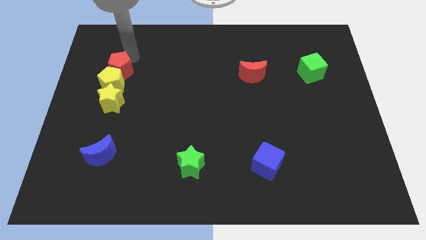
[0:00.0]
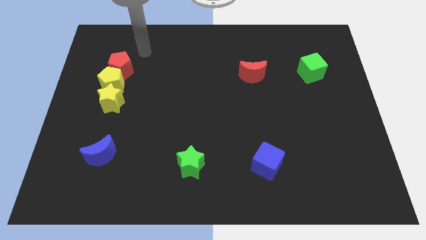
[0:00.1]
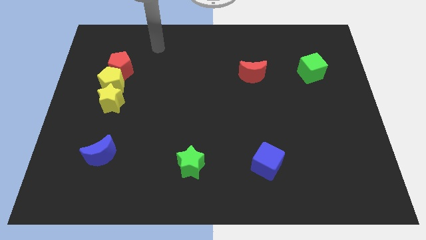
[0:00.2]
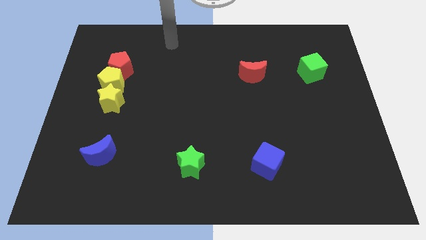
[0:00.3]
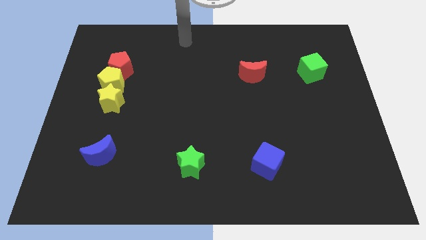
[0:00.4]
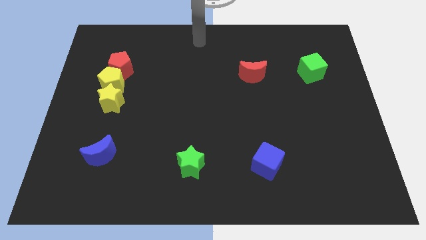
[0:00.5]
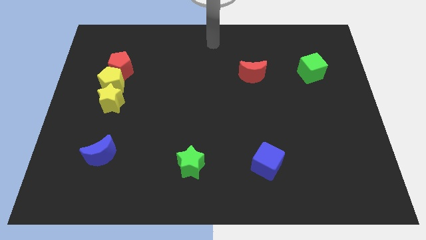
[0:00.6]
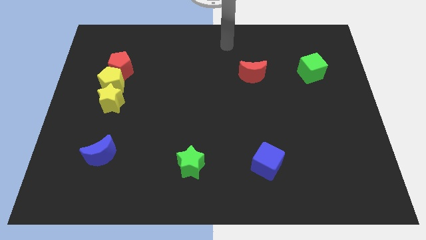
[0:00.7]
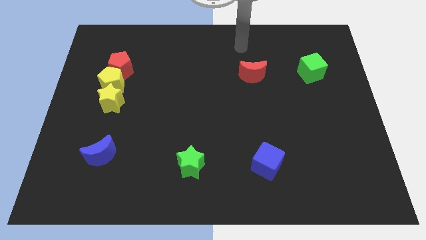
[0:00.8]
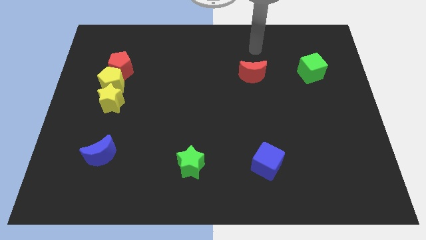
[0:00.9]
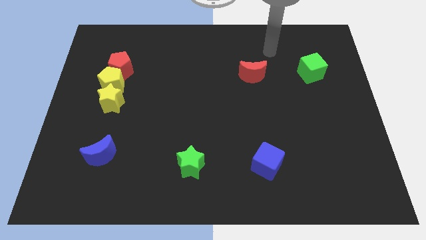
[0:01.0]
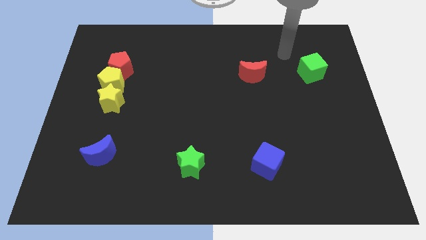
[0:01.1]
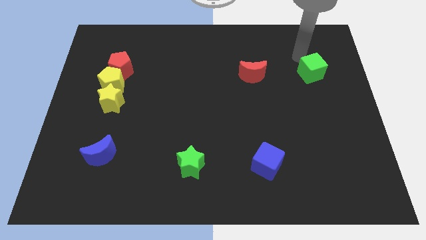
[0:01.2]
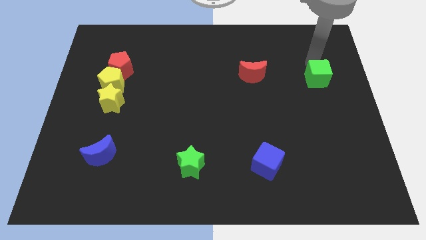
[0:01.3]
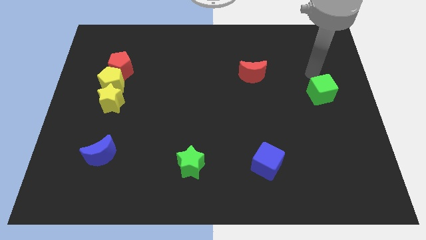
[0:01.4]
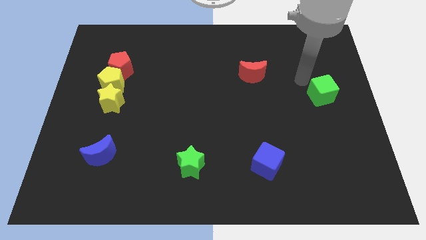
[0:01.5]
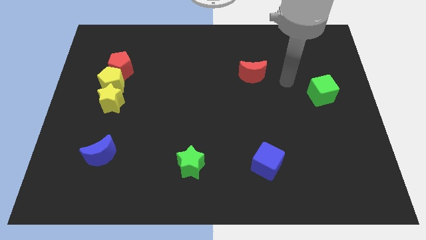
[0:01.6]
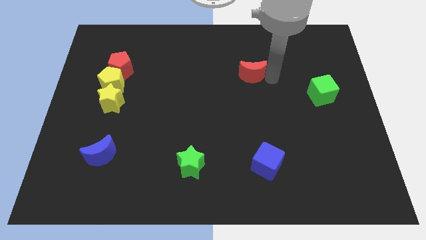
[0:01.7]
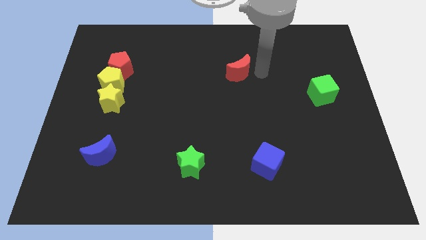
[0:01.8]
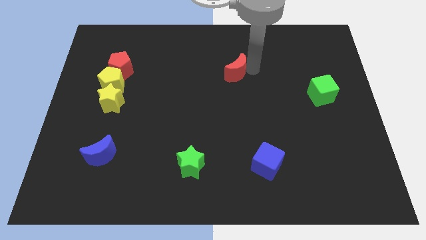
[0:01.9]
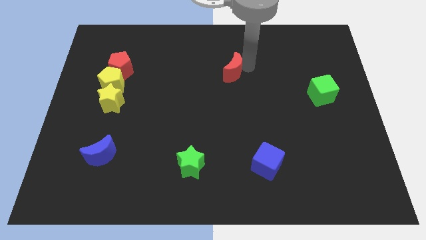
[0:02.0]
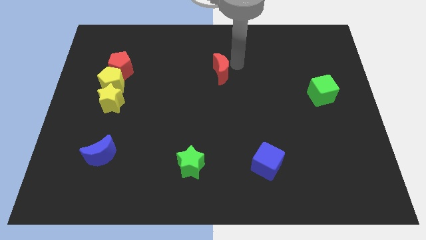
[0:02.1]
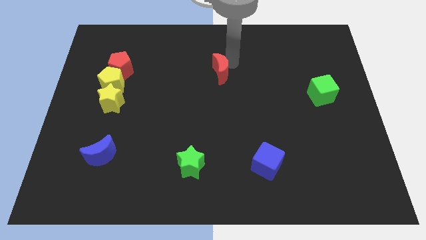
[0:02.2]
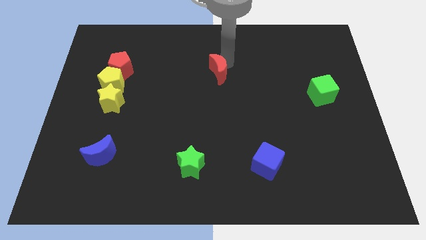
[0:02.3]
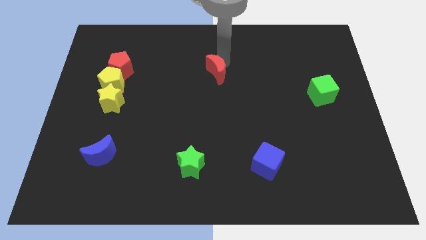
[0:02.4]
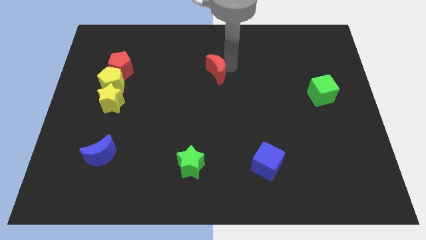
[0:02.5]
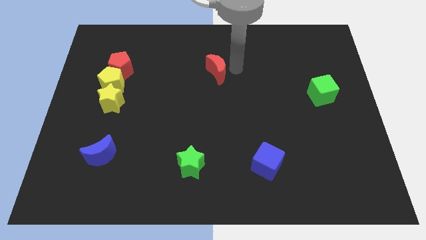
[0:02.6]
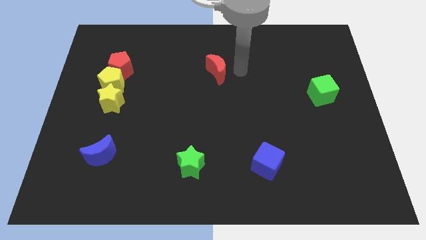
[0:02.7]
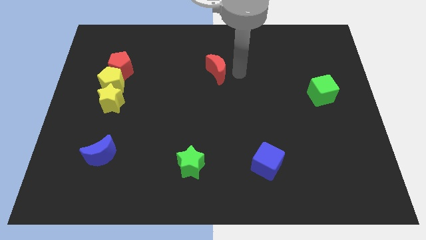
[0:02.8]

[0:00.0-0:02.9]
slightly move the red moon and the green cube in opposite directions

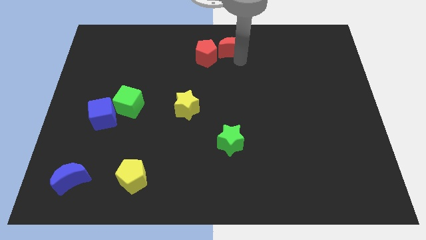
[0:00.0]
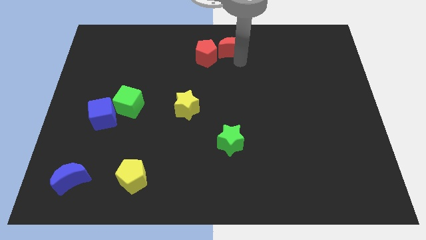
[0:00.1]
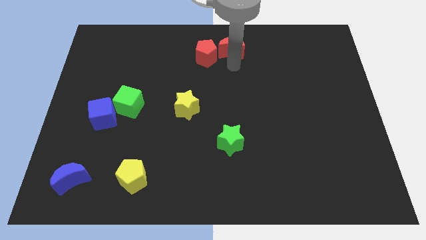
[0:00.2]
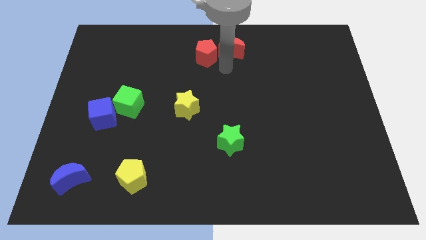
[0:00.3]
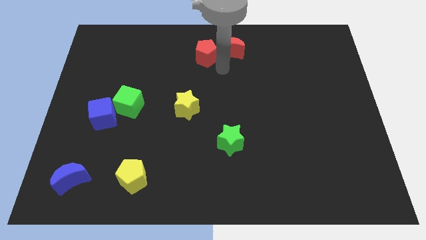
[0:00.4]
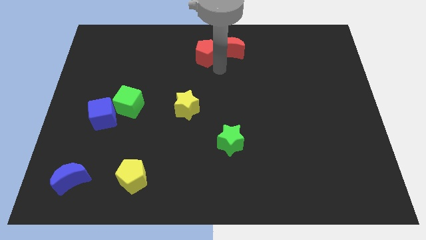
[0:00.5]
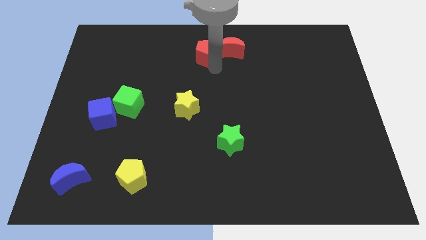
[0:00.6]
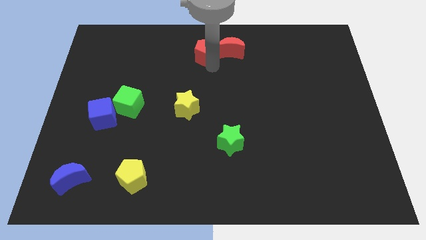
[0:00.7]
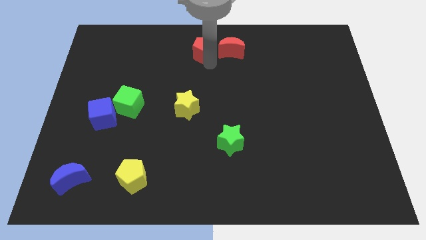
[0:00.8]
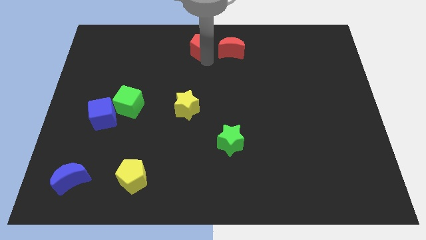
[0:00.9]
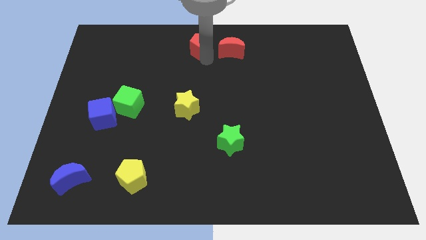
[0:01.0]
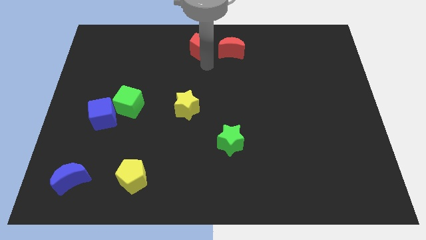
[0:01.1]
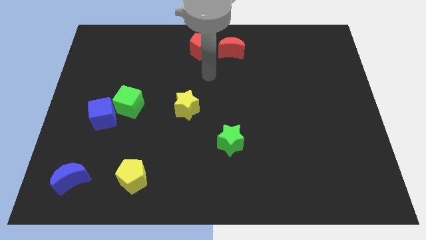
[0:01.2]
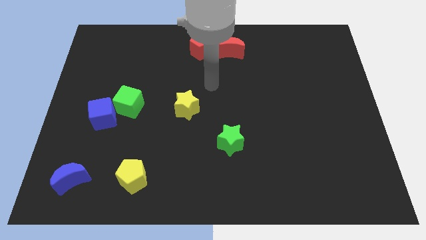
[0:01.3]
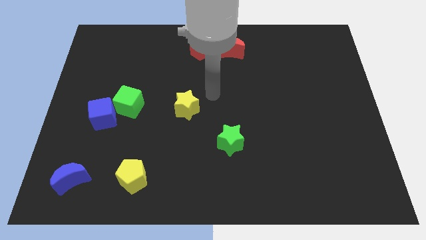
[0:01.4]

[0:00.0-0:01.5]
slightly move the red pentagon up

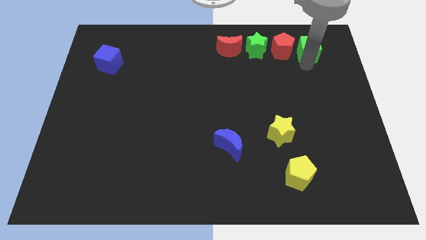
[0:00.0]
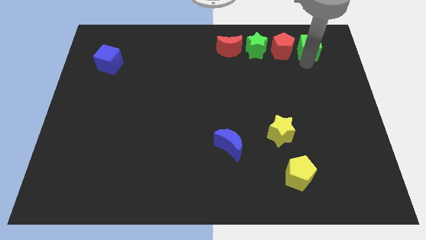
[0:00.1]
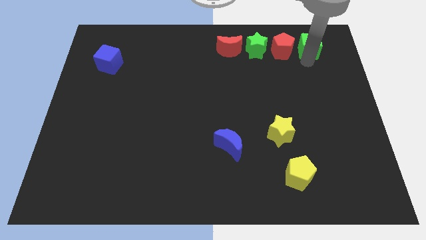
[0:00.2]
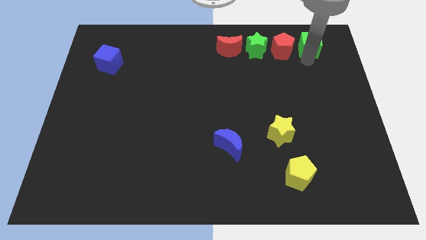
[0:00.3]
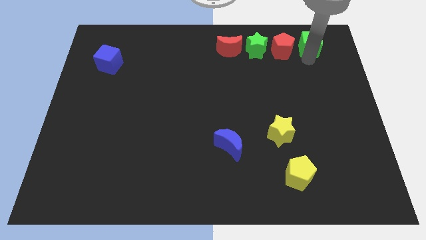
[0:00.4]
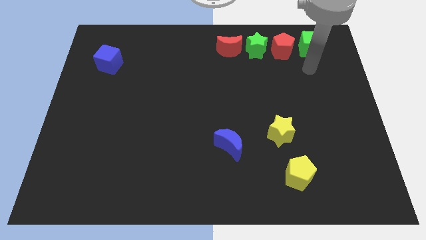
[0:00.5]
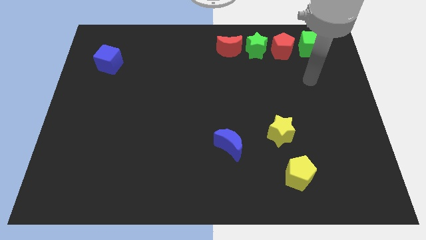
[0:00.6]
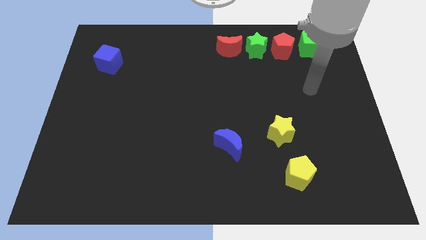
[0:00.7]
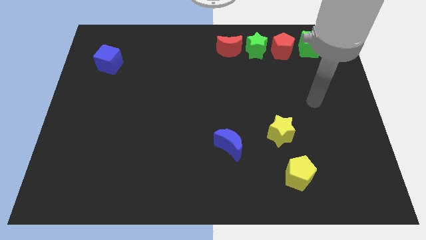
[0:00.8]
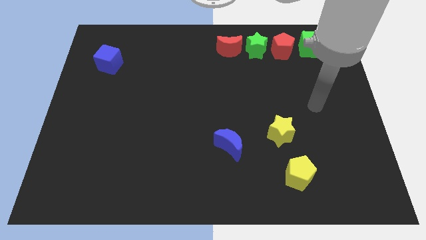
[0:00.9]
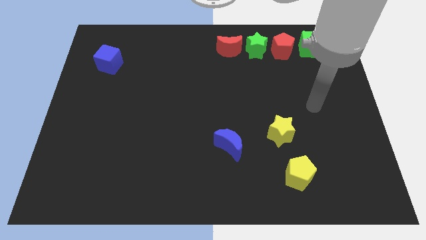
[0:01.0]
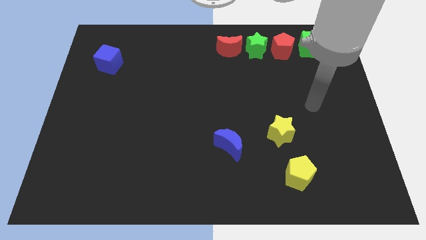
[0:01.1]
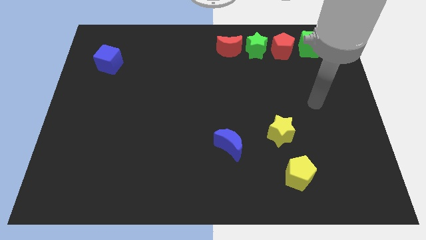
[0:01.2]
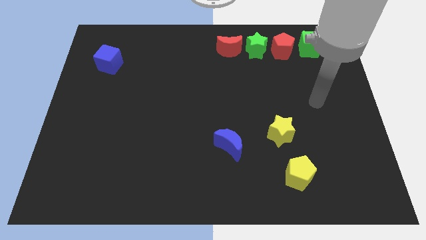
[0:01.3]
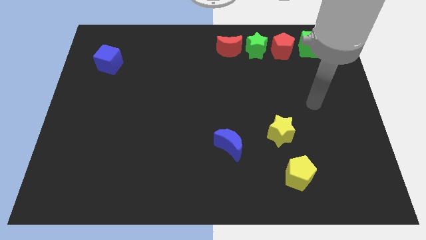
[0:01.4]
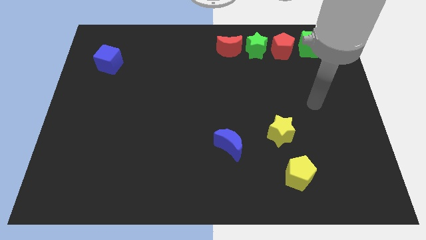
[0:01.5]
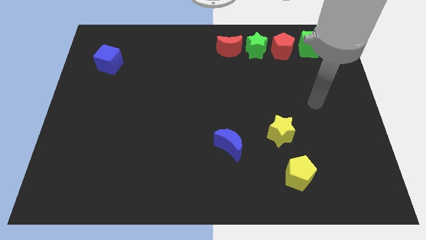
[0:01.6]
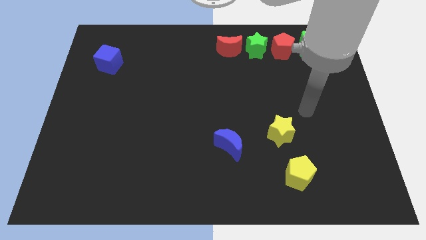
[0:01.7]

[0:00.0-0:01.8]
place green cube to the right of red pentagon

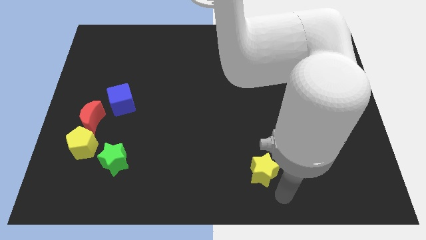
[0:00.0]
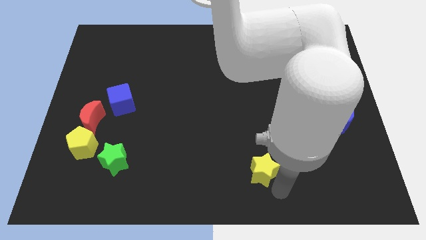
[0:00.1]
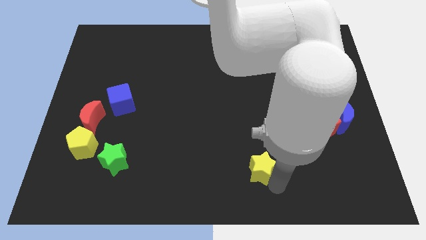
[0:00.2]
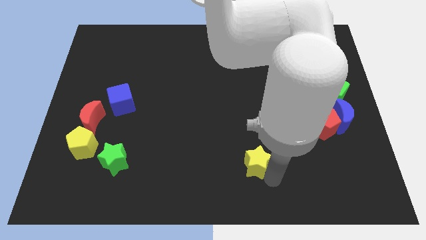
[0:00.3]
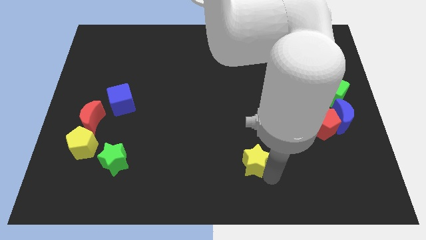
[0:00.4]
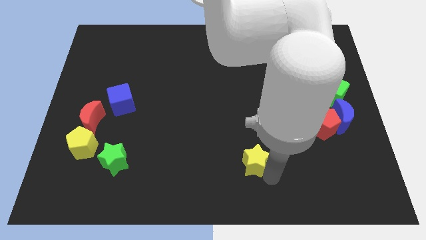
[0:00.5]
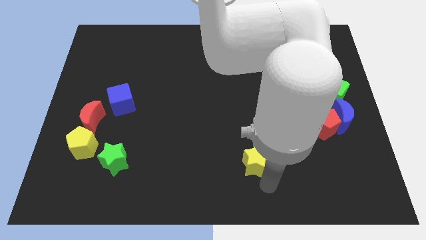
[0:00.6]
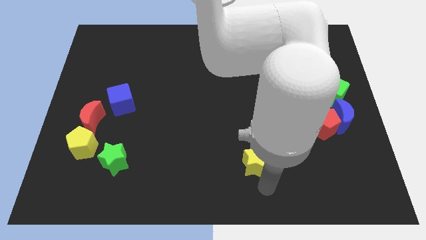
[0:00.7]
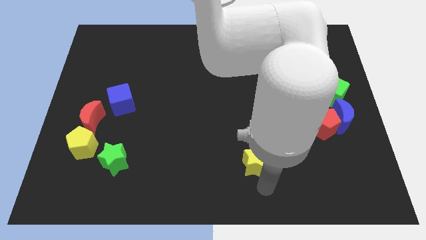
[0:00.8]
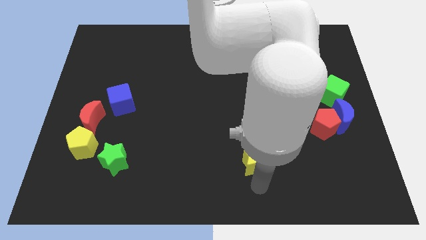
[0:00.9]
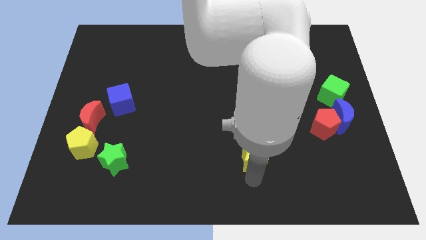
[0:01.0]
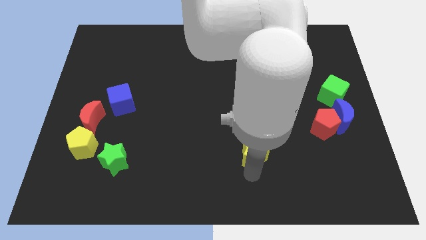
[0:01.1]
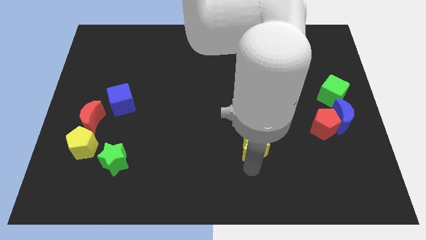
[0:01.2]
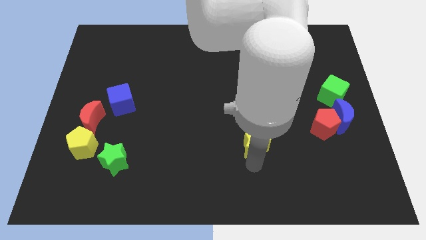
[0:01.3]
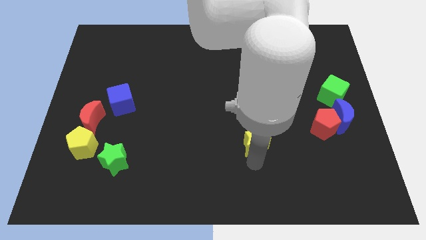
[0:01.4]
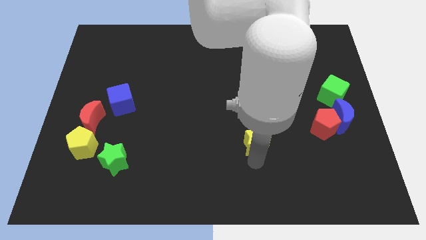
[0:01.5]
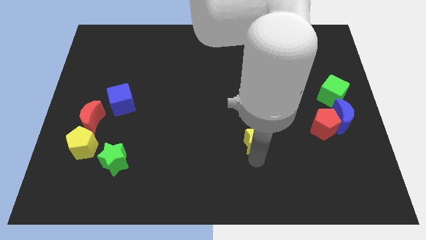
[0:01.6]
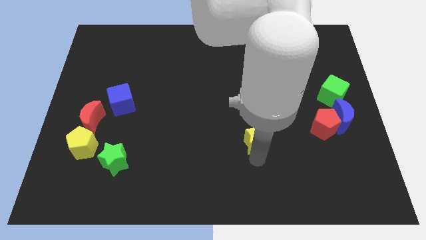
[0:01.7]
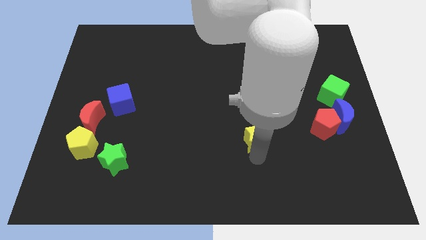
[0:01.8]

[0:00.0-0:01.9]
move the yellow towards top the board

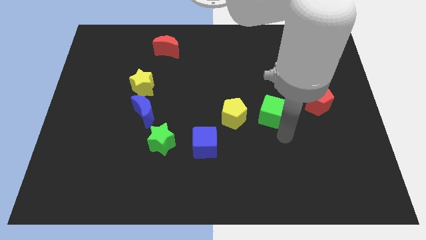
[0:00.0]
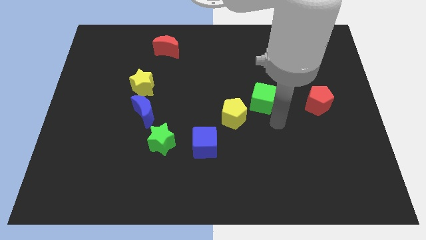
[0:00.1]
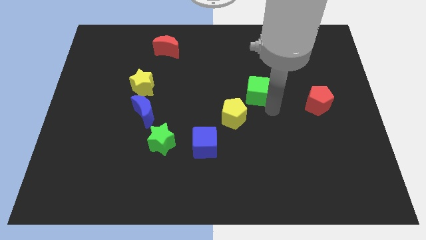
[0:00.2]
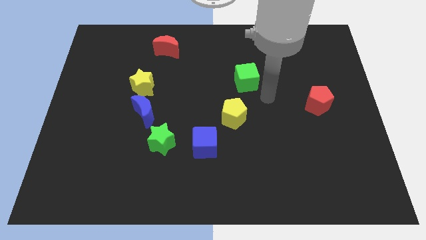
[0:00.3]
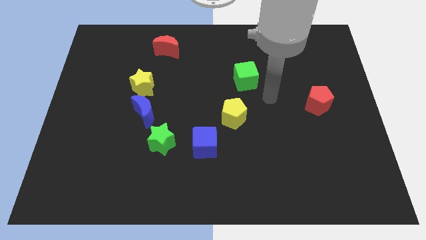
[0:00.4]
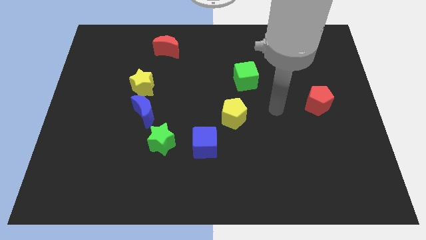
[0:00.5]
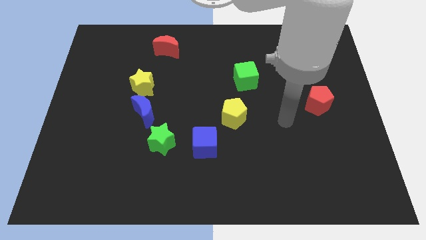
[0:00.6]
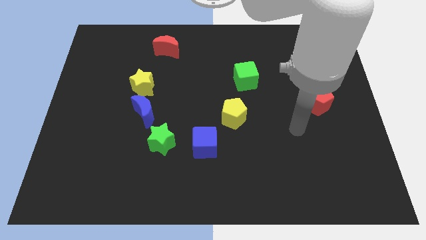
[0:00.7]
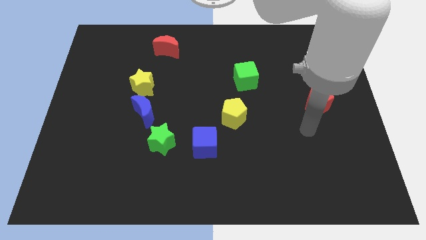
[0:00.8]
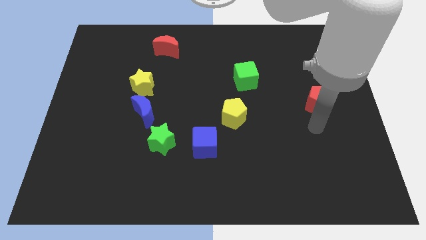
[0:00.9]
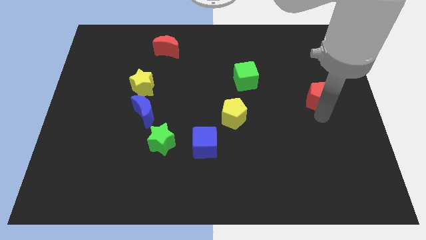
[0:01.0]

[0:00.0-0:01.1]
push the green cube towards the top of the yellow pentagon
